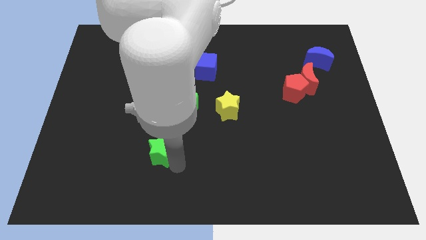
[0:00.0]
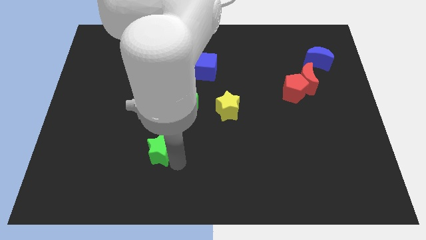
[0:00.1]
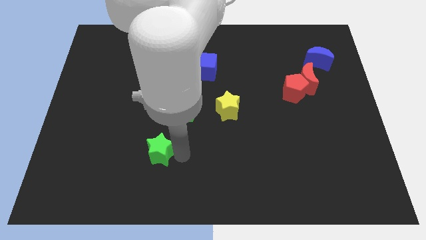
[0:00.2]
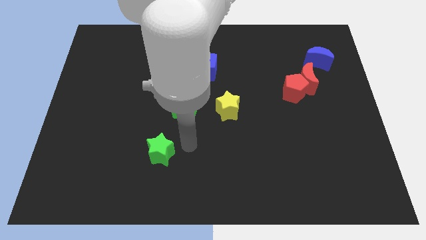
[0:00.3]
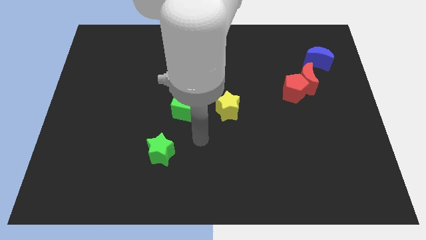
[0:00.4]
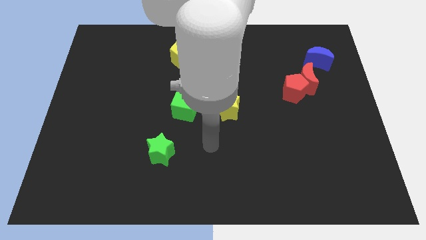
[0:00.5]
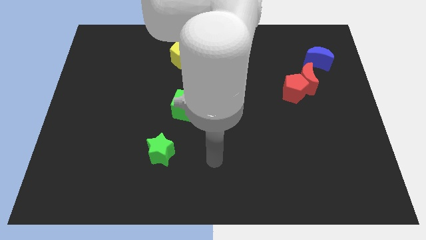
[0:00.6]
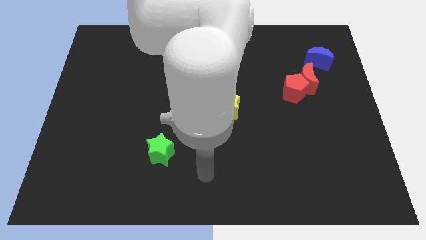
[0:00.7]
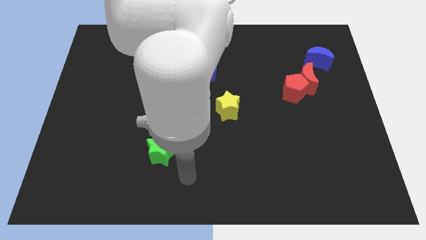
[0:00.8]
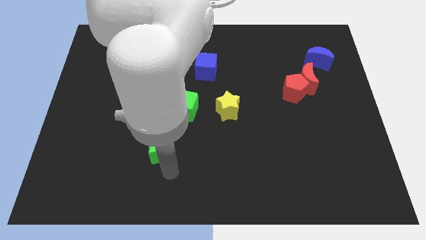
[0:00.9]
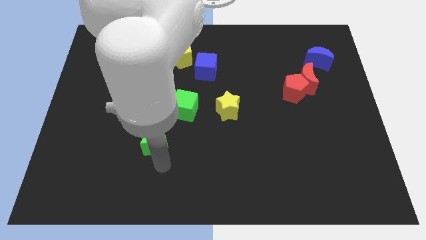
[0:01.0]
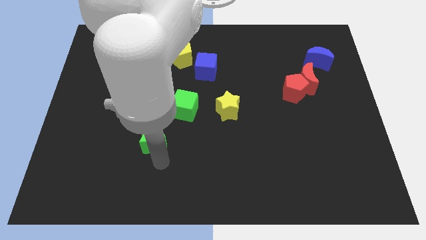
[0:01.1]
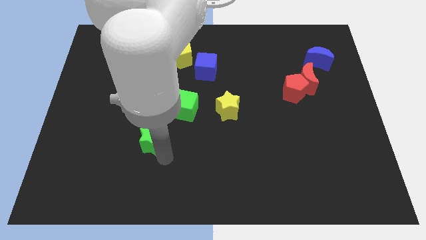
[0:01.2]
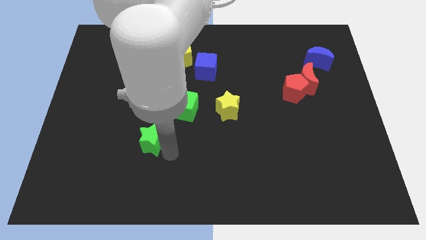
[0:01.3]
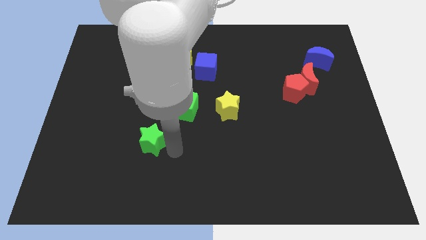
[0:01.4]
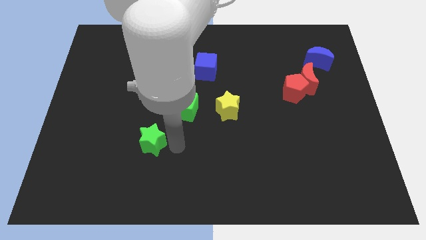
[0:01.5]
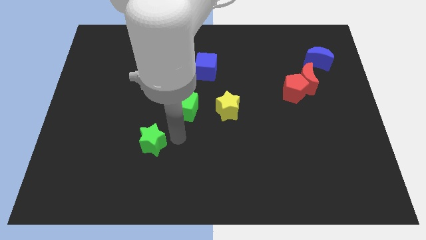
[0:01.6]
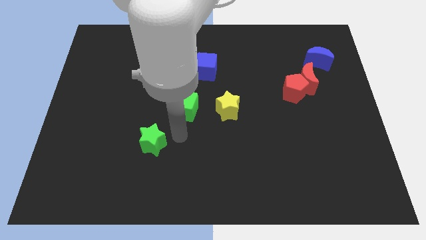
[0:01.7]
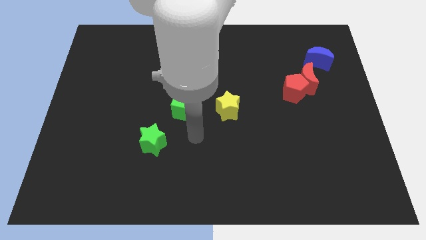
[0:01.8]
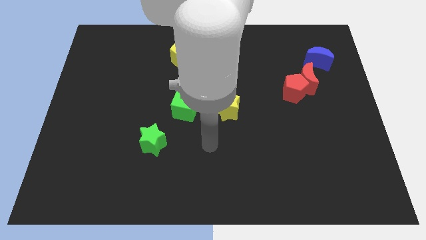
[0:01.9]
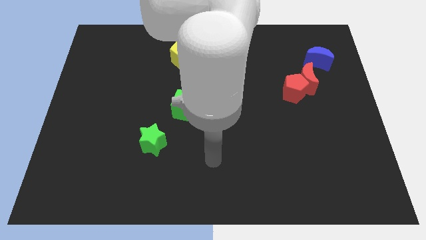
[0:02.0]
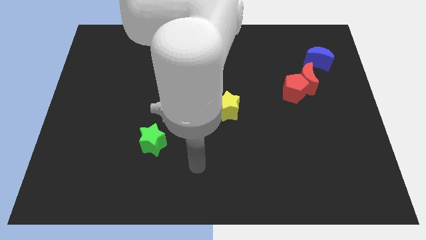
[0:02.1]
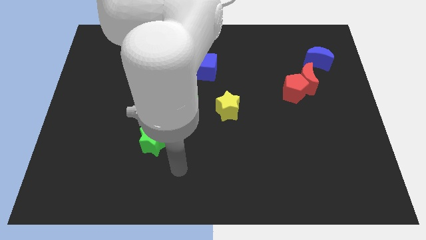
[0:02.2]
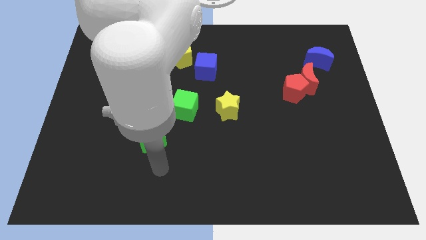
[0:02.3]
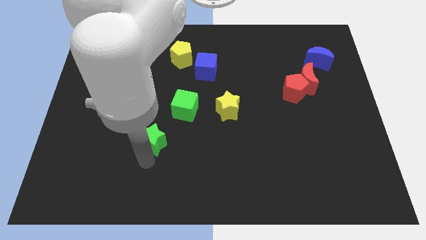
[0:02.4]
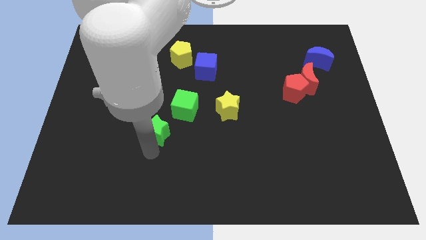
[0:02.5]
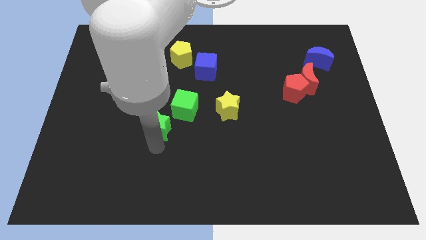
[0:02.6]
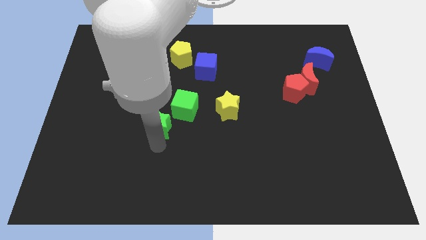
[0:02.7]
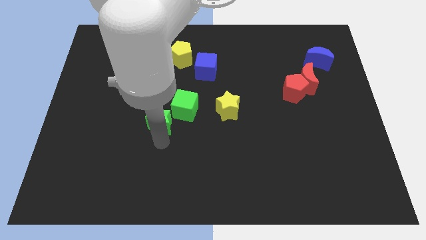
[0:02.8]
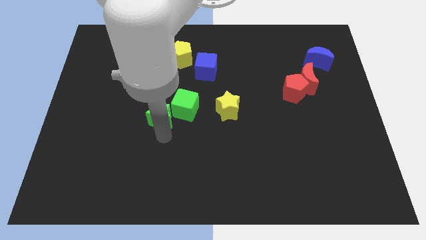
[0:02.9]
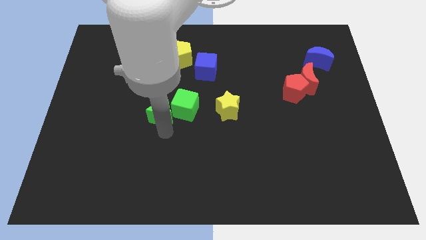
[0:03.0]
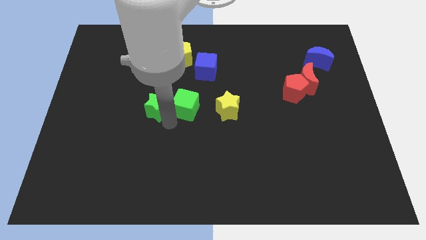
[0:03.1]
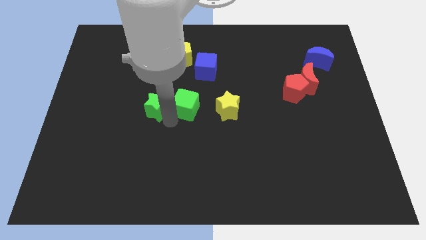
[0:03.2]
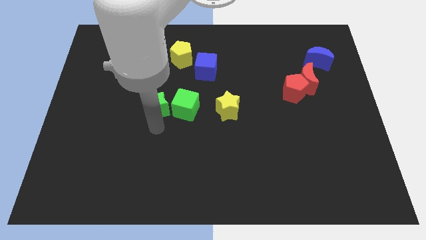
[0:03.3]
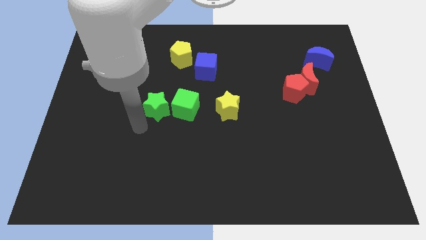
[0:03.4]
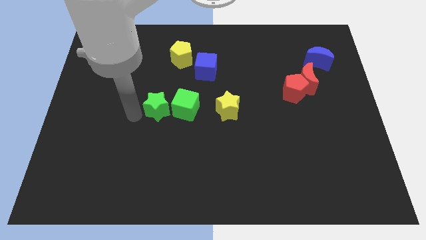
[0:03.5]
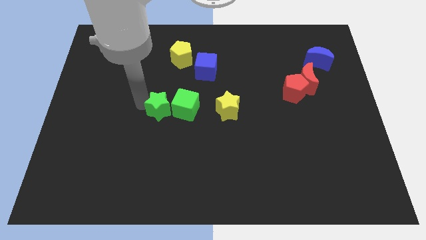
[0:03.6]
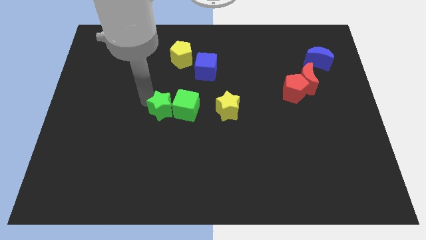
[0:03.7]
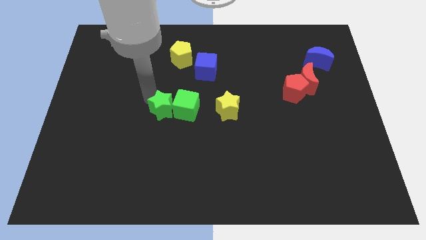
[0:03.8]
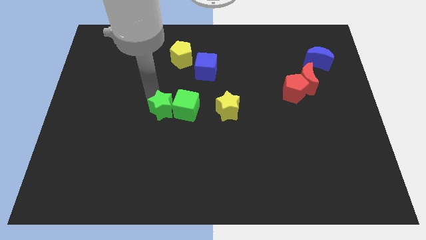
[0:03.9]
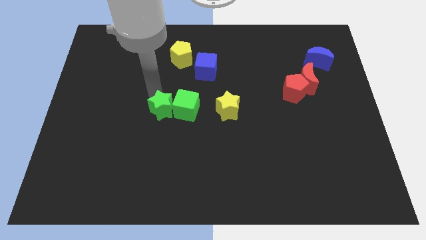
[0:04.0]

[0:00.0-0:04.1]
move green star parallel to yellow star

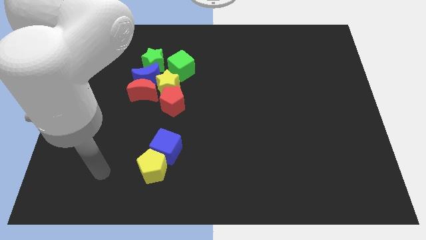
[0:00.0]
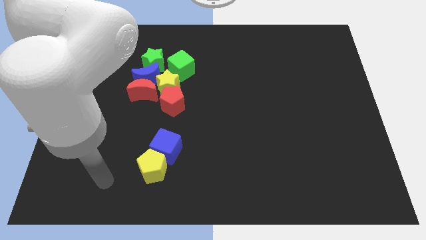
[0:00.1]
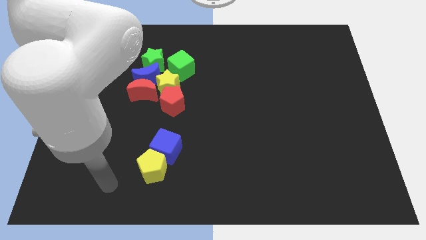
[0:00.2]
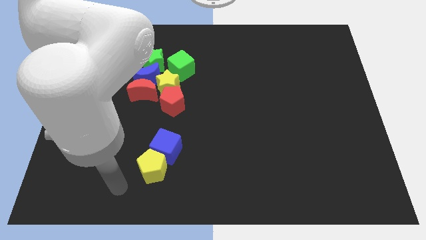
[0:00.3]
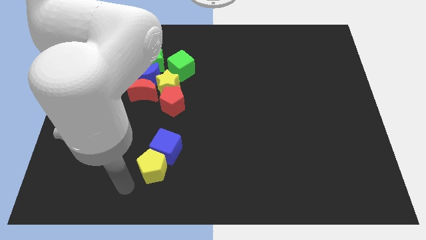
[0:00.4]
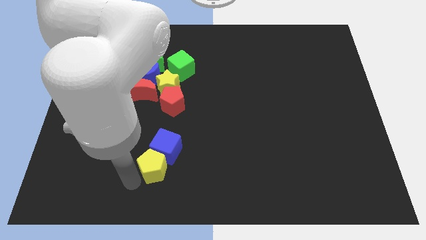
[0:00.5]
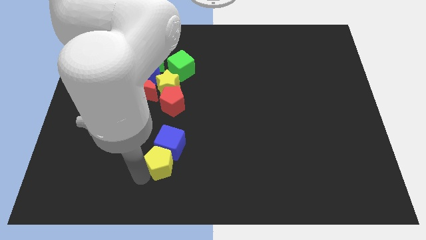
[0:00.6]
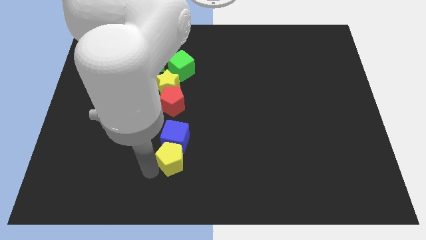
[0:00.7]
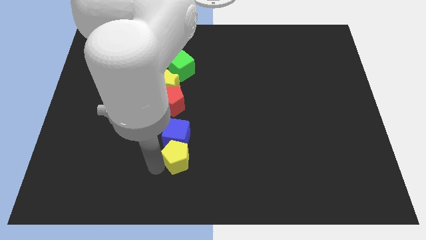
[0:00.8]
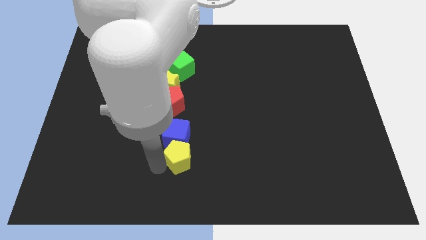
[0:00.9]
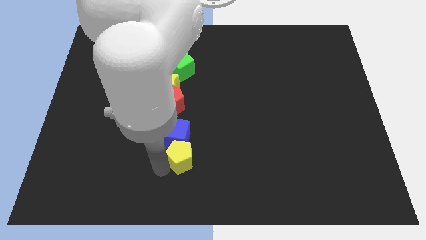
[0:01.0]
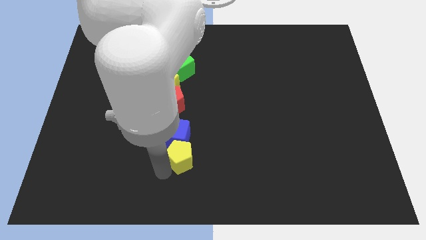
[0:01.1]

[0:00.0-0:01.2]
push the yellow pentagon along with blue cube towards up

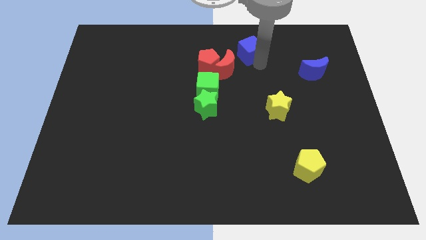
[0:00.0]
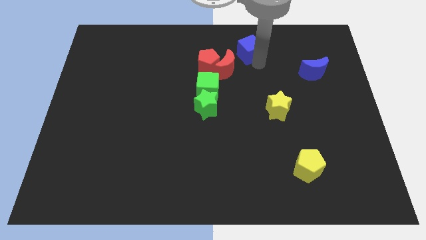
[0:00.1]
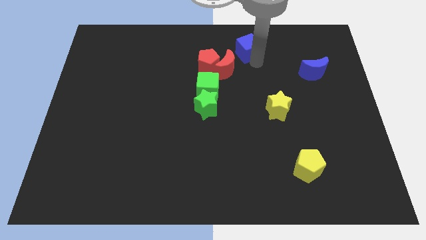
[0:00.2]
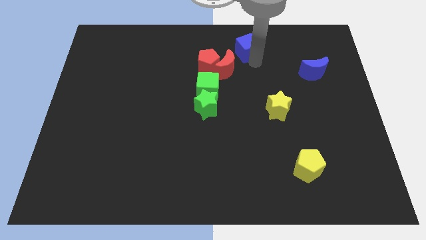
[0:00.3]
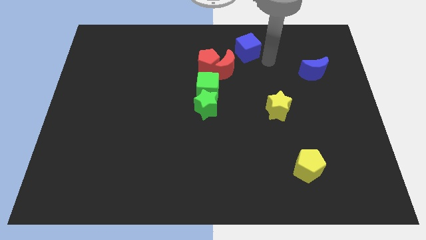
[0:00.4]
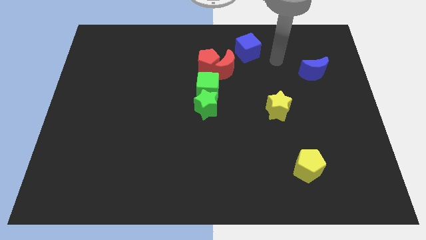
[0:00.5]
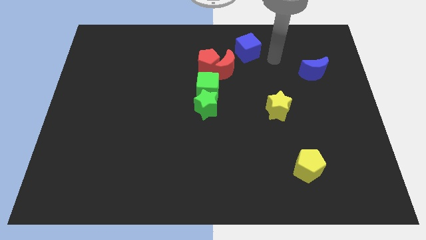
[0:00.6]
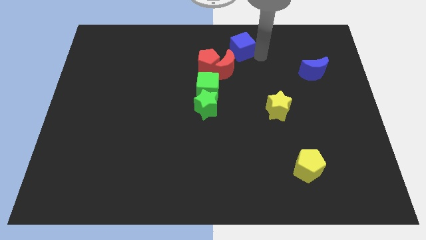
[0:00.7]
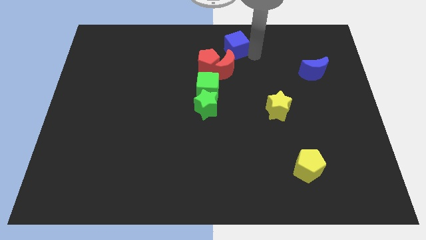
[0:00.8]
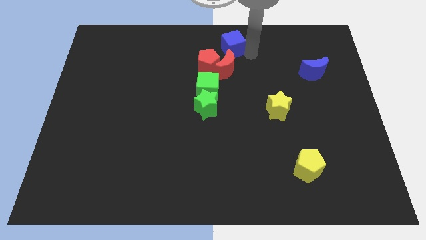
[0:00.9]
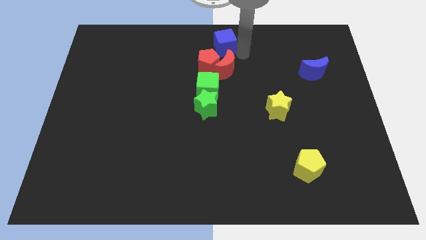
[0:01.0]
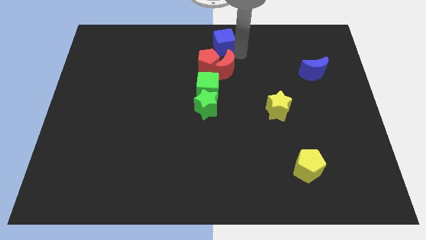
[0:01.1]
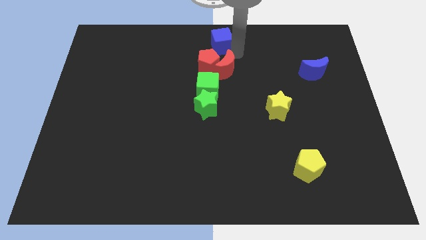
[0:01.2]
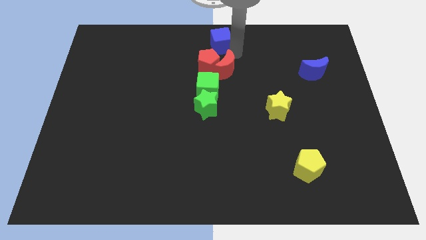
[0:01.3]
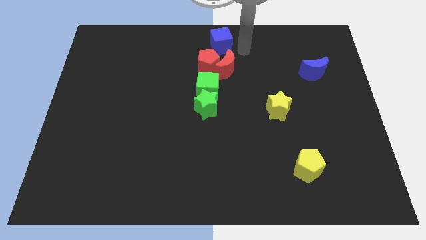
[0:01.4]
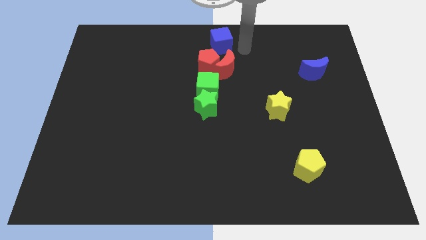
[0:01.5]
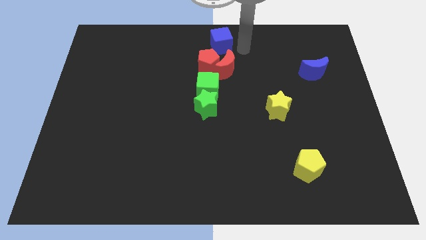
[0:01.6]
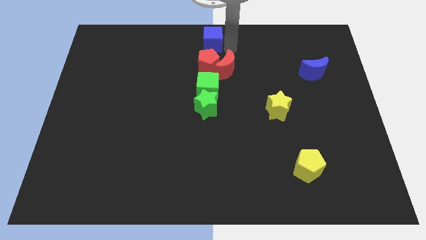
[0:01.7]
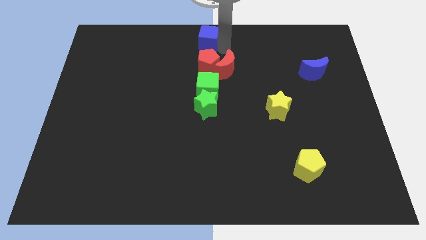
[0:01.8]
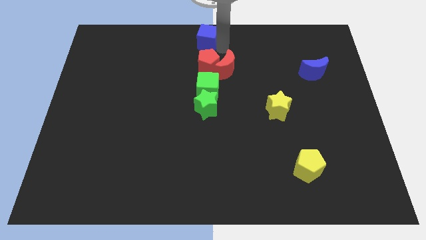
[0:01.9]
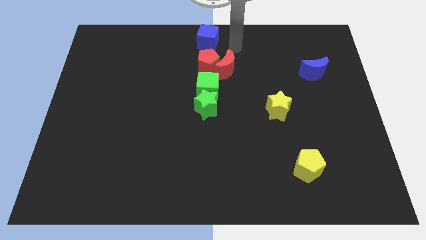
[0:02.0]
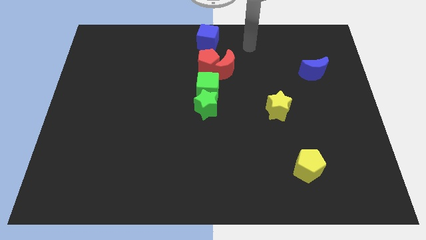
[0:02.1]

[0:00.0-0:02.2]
move the blue cube above the red pentagon

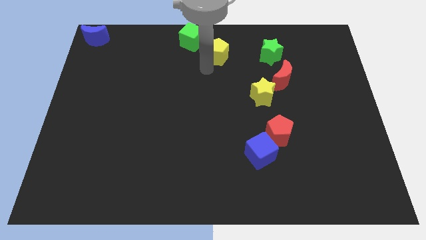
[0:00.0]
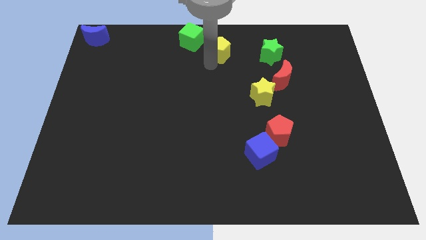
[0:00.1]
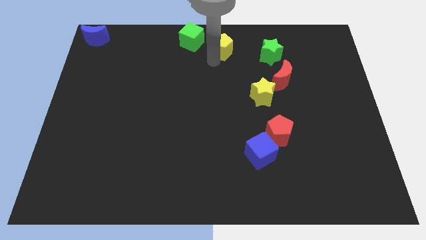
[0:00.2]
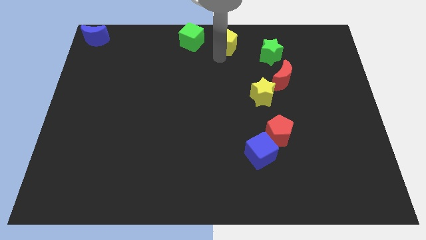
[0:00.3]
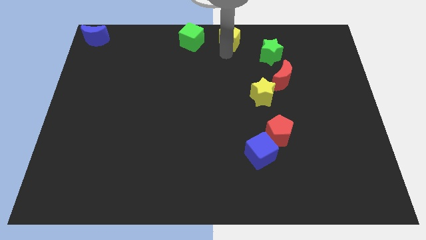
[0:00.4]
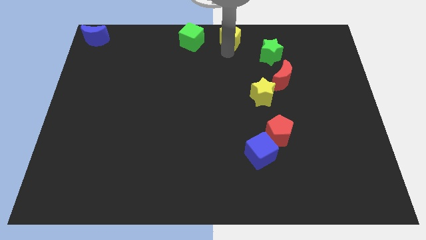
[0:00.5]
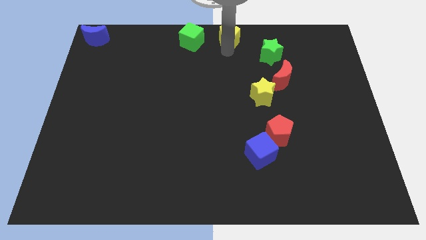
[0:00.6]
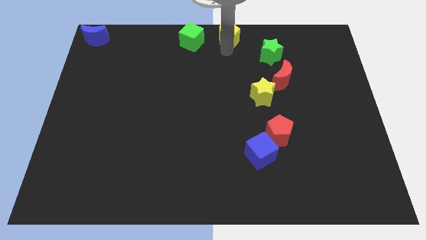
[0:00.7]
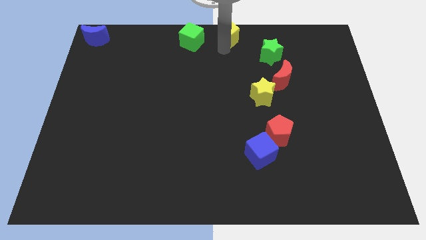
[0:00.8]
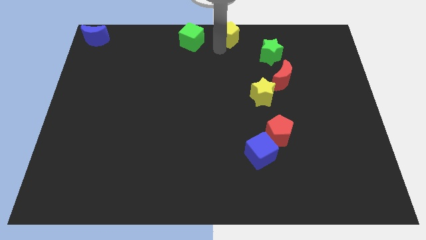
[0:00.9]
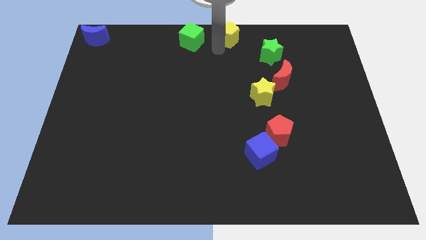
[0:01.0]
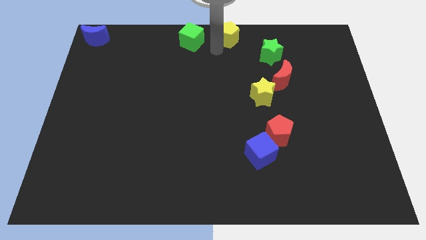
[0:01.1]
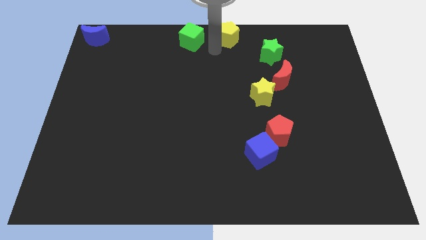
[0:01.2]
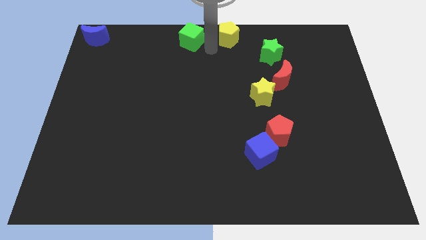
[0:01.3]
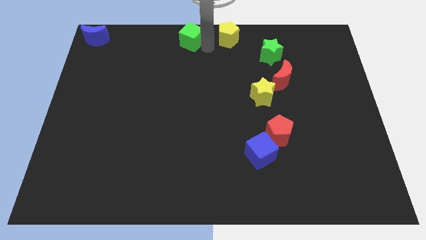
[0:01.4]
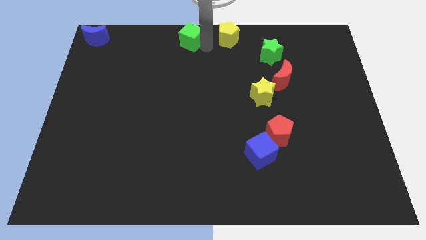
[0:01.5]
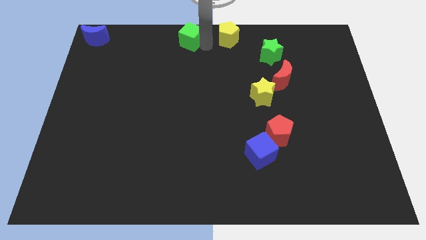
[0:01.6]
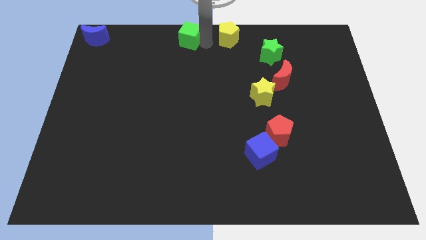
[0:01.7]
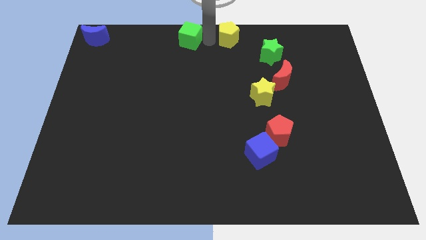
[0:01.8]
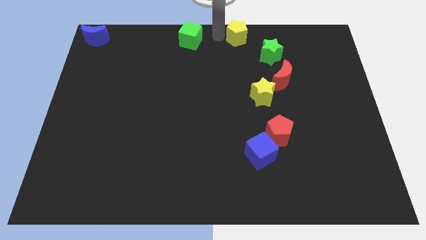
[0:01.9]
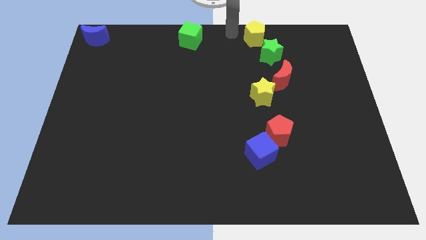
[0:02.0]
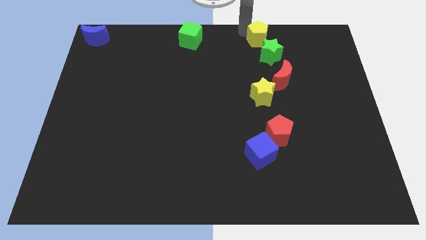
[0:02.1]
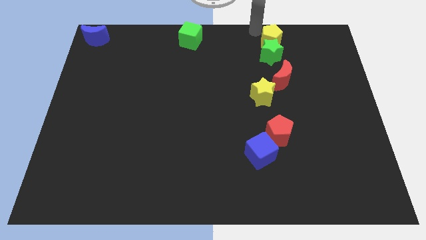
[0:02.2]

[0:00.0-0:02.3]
place yellow pentagon to the top of green star
